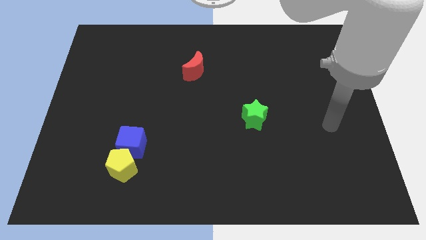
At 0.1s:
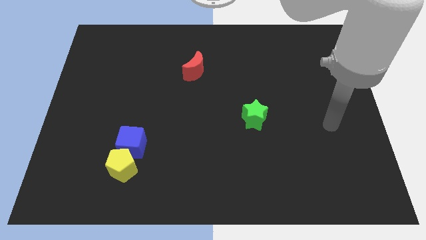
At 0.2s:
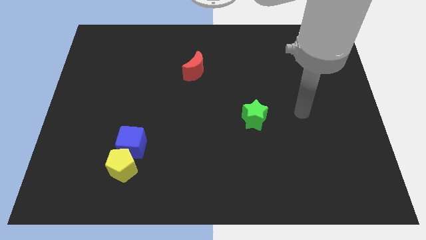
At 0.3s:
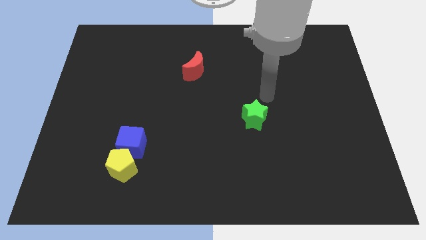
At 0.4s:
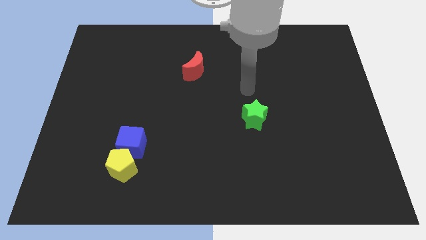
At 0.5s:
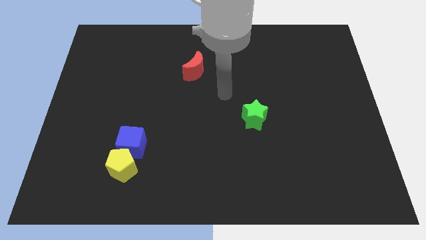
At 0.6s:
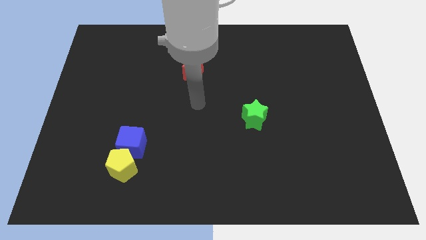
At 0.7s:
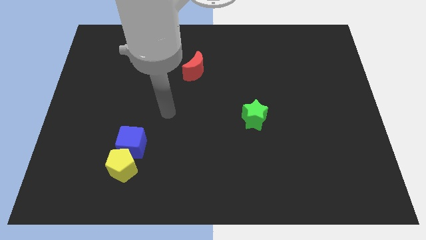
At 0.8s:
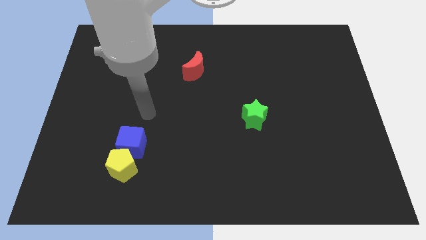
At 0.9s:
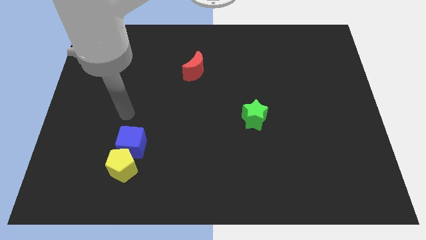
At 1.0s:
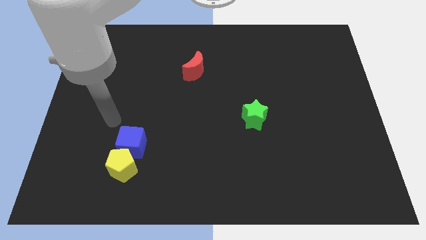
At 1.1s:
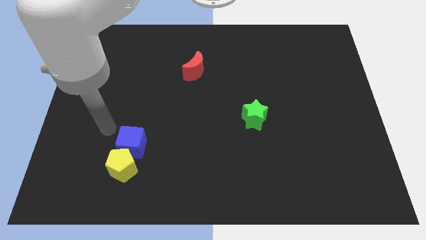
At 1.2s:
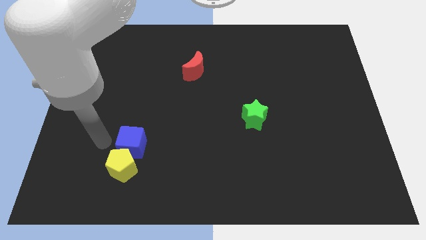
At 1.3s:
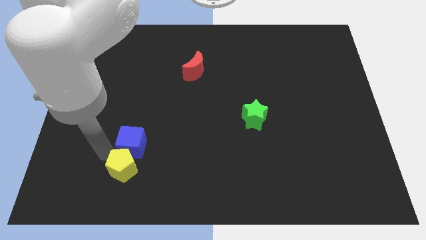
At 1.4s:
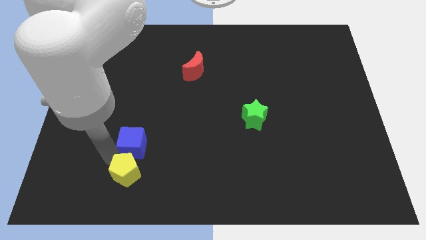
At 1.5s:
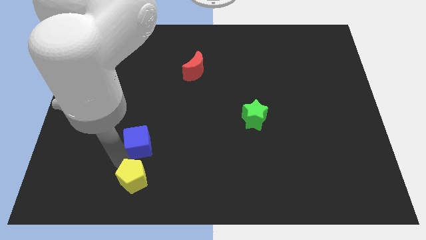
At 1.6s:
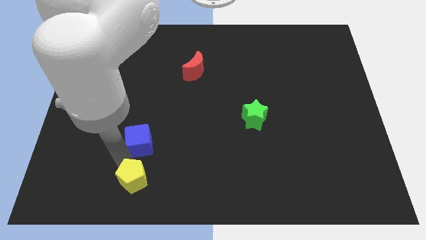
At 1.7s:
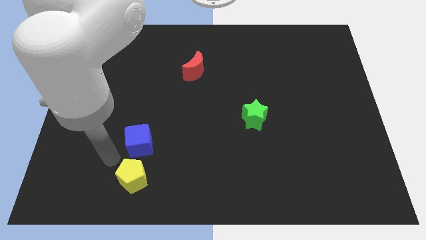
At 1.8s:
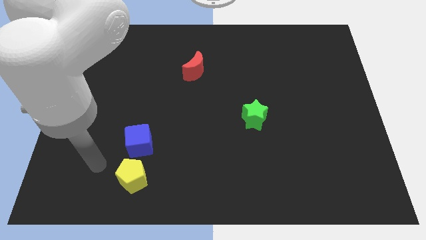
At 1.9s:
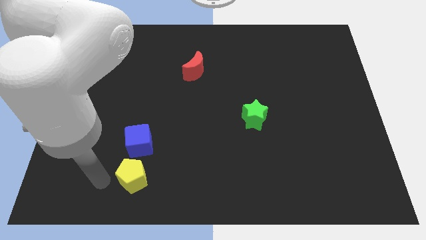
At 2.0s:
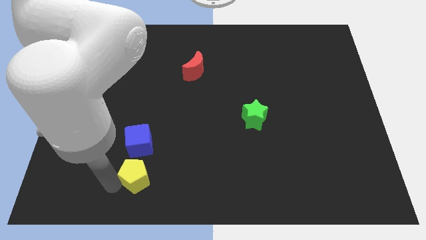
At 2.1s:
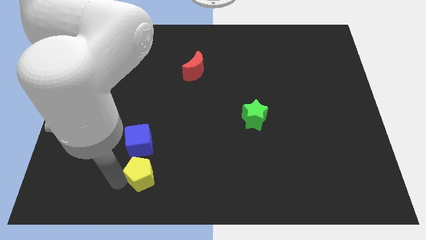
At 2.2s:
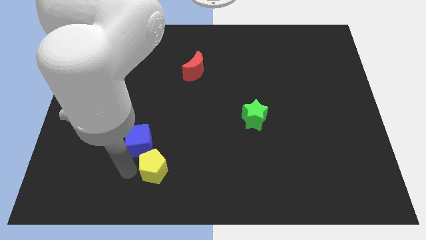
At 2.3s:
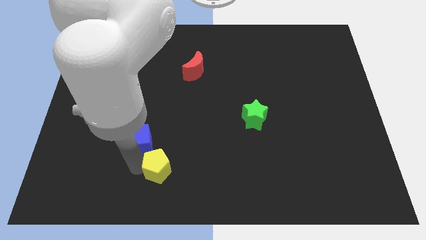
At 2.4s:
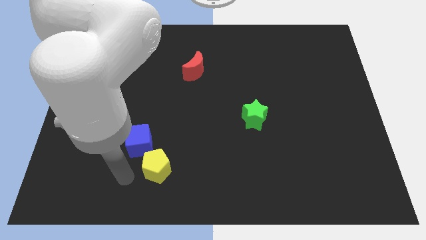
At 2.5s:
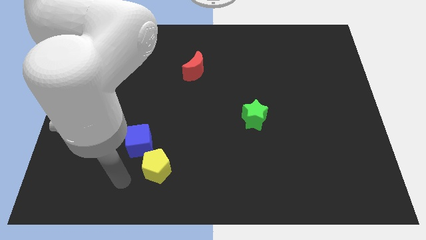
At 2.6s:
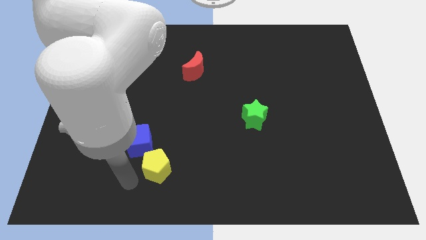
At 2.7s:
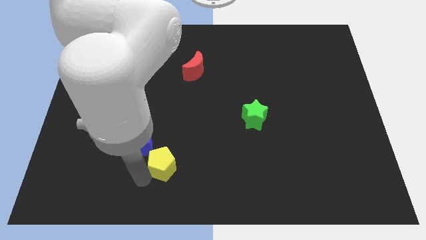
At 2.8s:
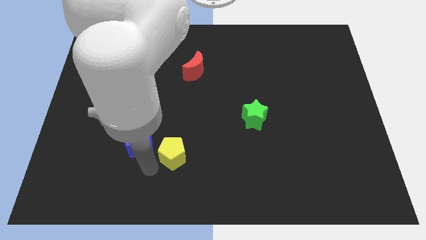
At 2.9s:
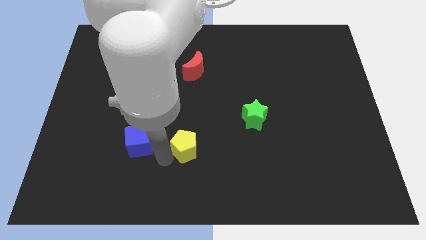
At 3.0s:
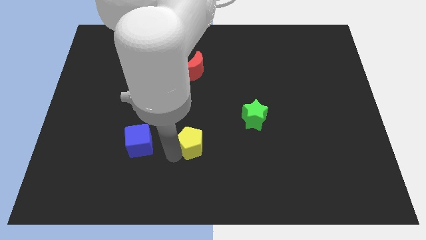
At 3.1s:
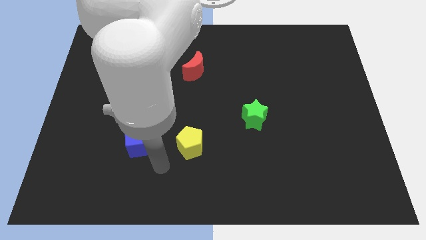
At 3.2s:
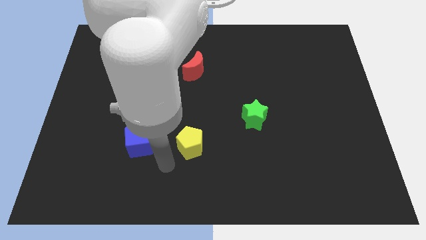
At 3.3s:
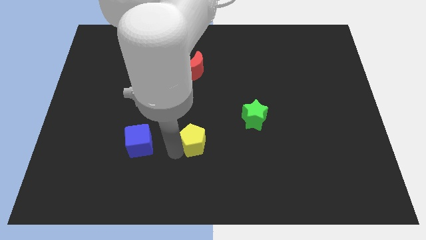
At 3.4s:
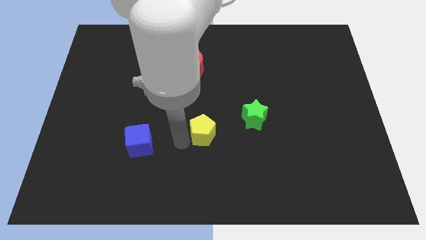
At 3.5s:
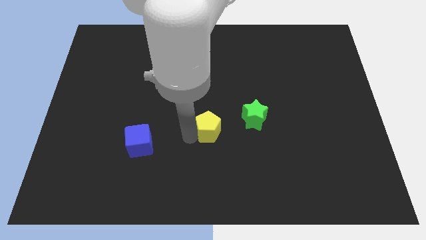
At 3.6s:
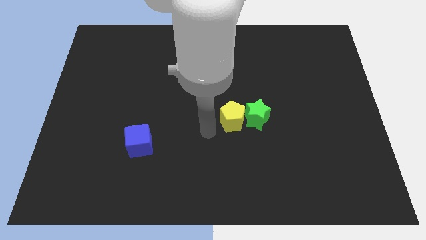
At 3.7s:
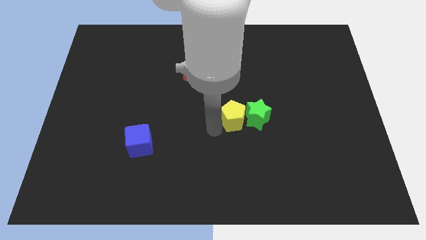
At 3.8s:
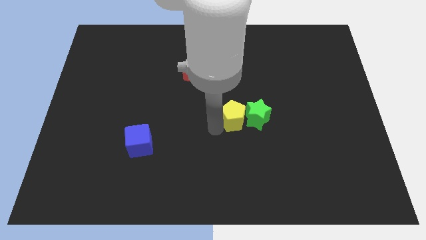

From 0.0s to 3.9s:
put the yellow pentagon next to the green star

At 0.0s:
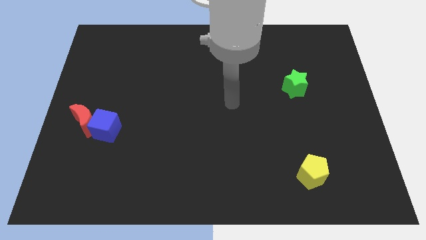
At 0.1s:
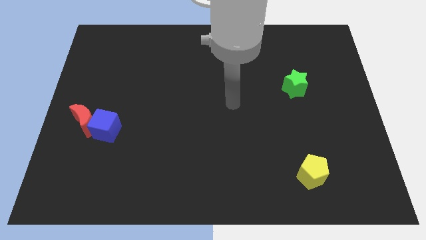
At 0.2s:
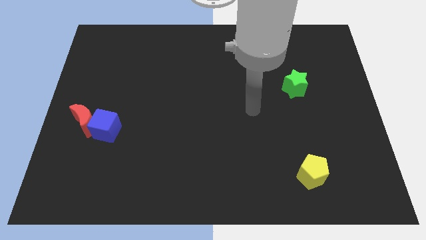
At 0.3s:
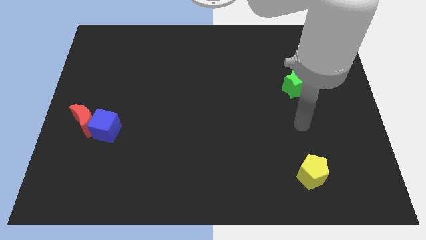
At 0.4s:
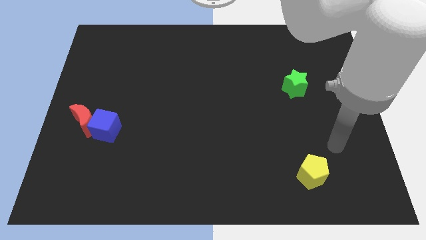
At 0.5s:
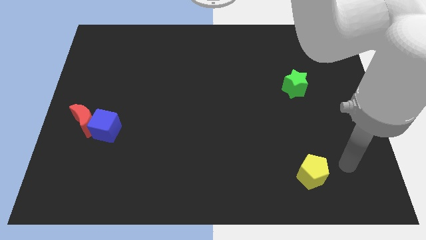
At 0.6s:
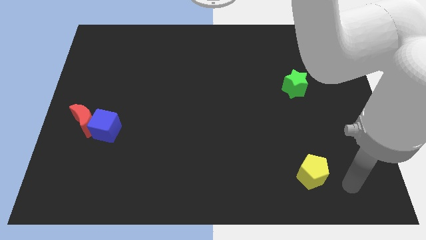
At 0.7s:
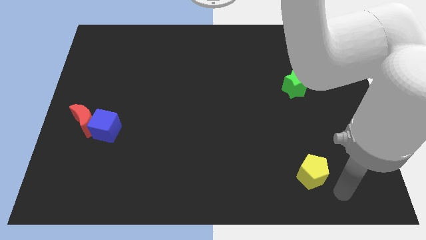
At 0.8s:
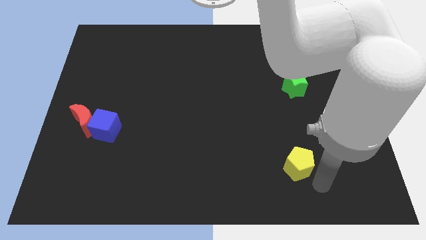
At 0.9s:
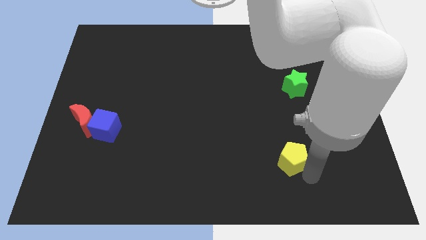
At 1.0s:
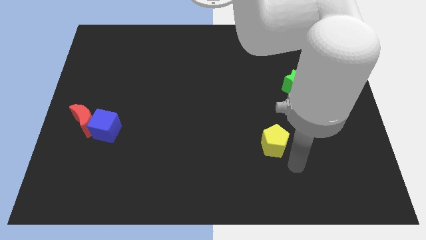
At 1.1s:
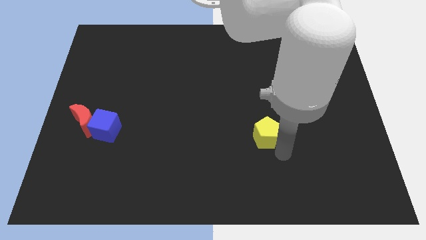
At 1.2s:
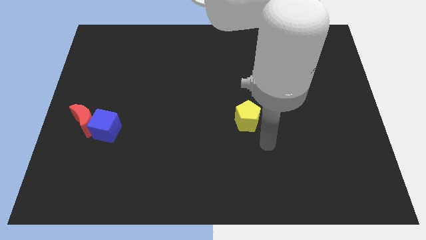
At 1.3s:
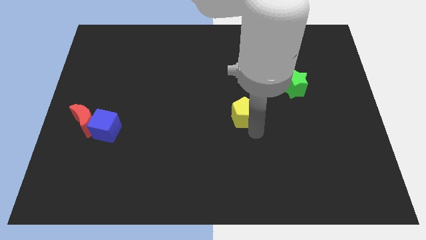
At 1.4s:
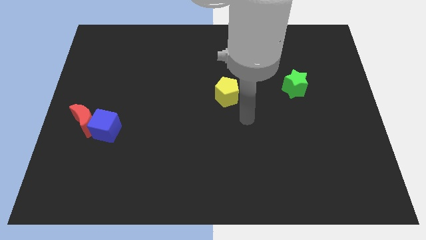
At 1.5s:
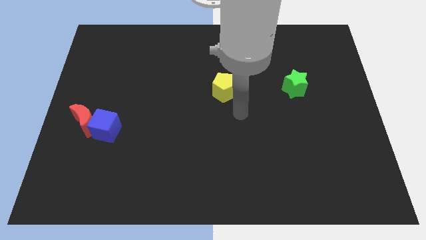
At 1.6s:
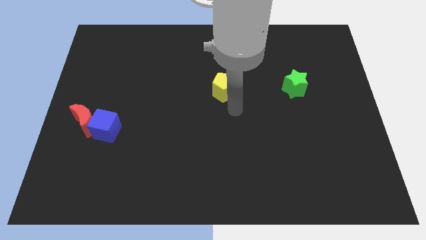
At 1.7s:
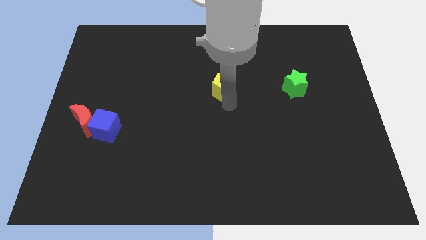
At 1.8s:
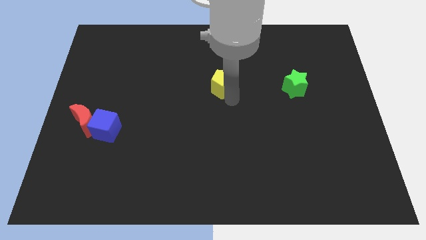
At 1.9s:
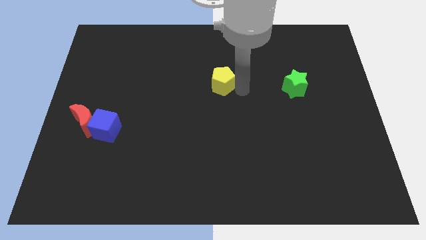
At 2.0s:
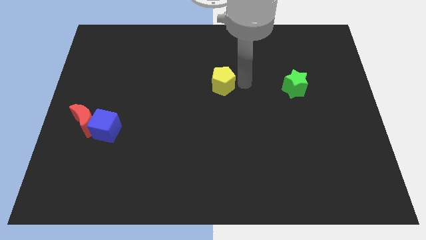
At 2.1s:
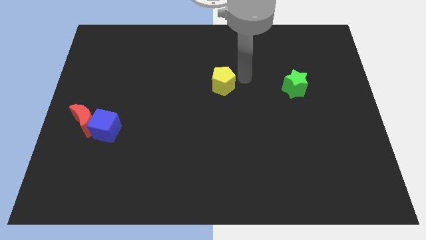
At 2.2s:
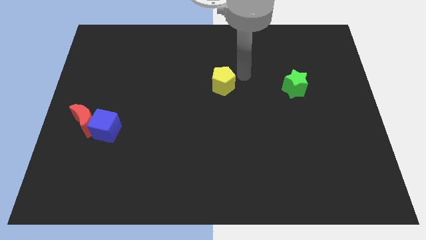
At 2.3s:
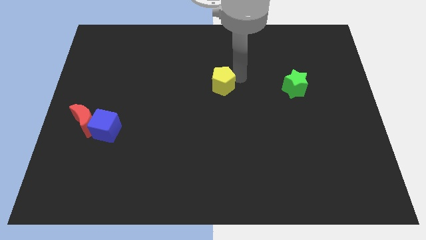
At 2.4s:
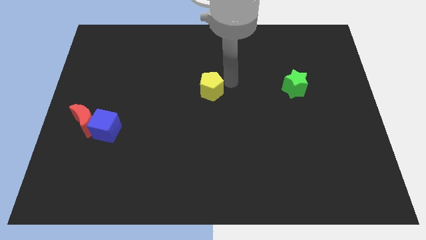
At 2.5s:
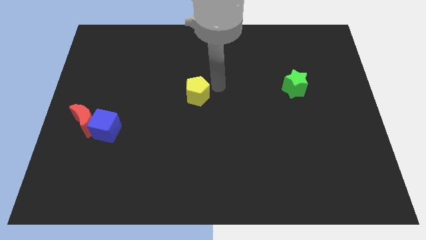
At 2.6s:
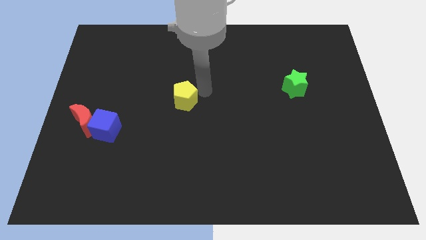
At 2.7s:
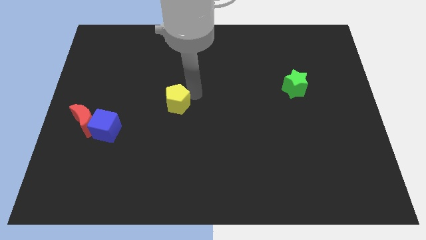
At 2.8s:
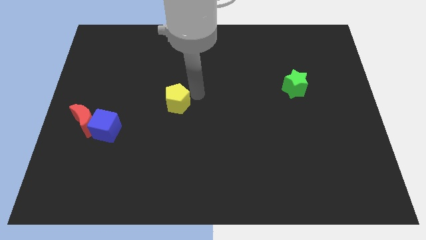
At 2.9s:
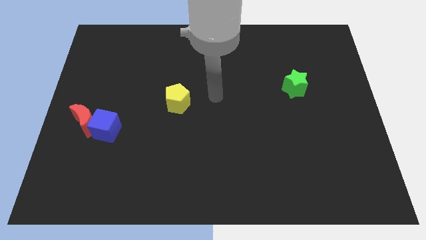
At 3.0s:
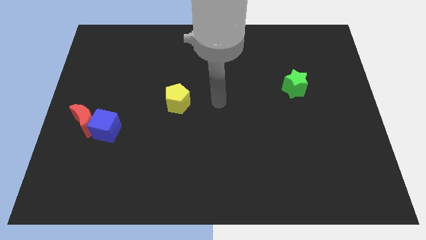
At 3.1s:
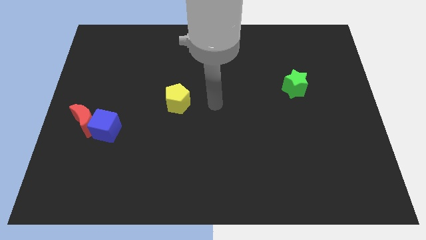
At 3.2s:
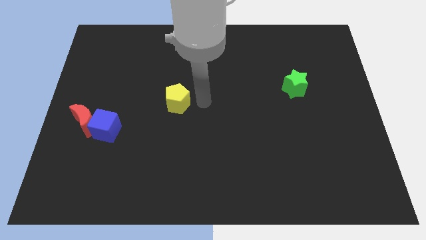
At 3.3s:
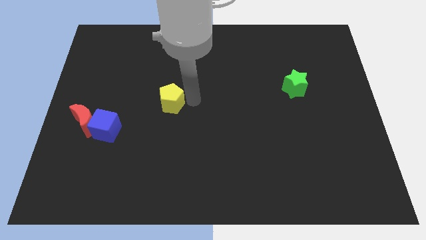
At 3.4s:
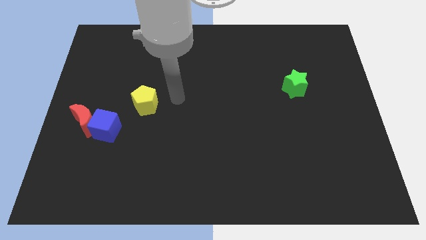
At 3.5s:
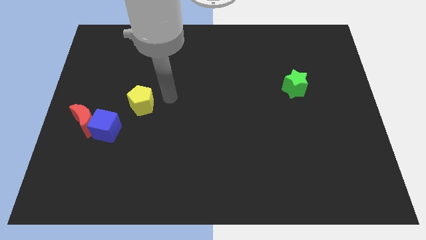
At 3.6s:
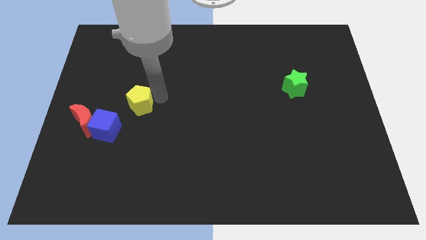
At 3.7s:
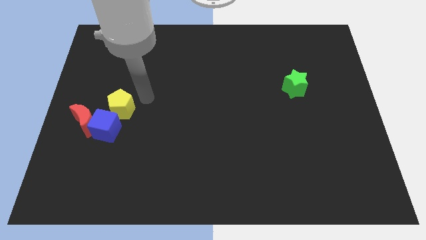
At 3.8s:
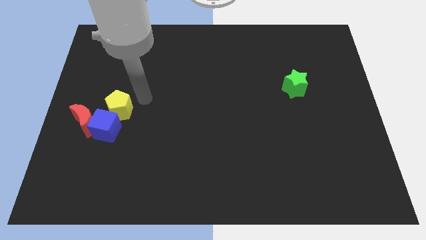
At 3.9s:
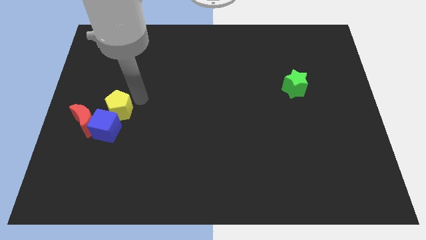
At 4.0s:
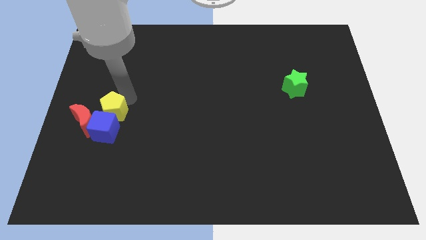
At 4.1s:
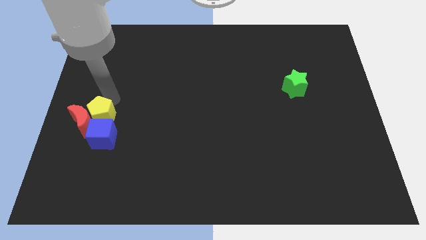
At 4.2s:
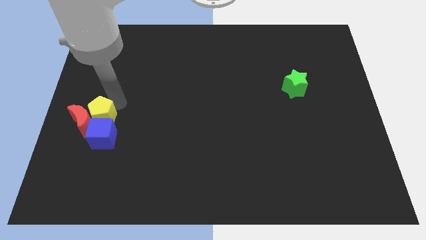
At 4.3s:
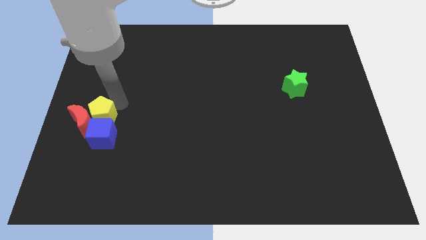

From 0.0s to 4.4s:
put the yellow block towards the red moon
